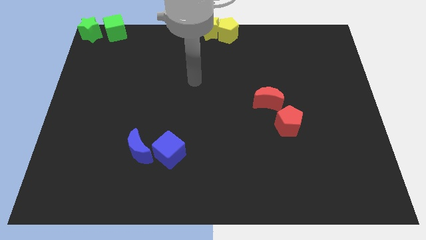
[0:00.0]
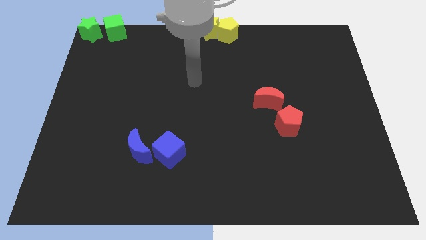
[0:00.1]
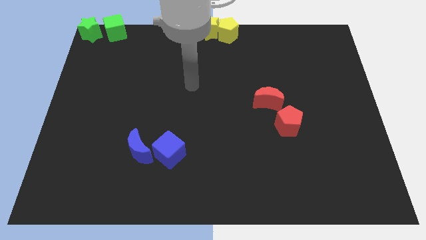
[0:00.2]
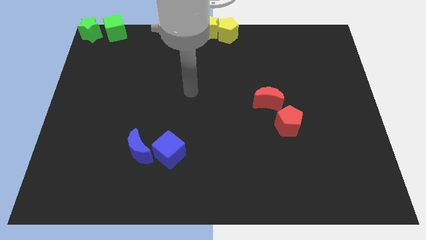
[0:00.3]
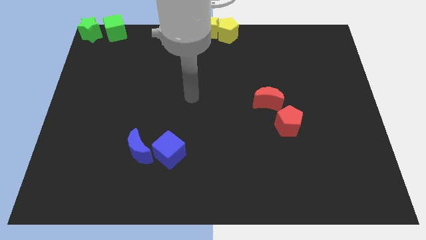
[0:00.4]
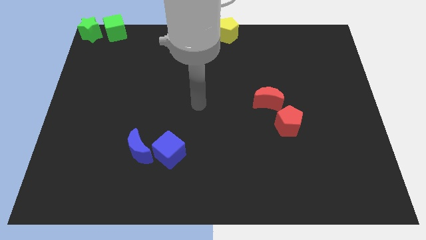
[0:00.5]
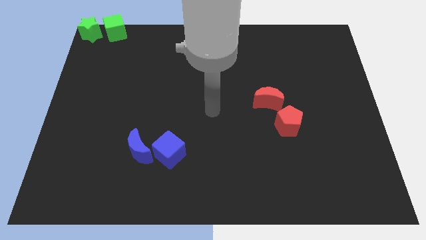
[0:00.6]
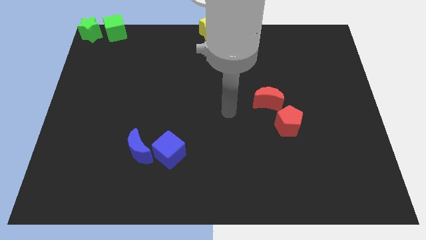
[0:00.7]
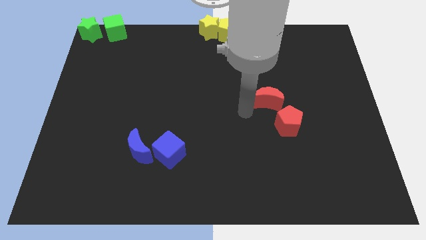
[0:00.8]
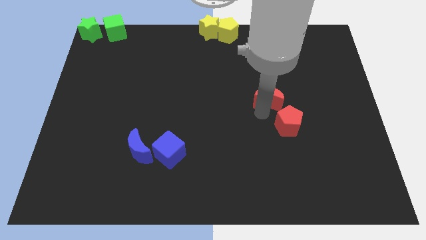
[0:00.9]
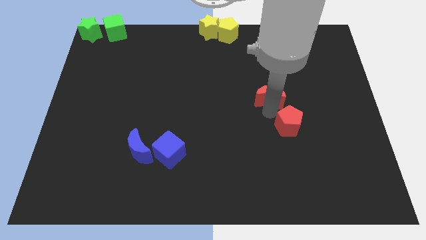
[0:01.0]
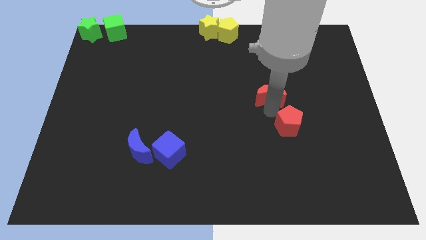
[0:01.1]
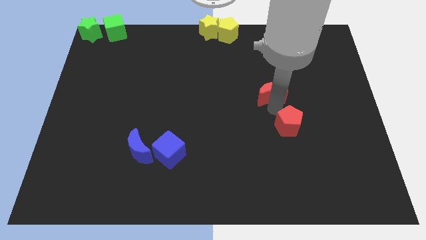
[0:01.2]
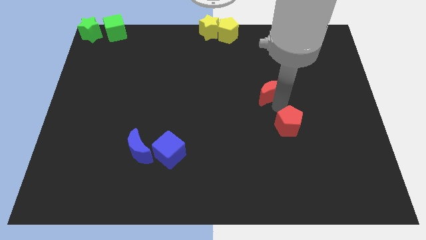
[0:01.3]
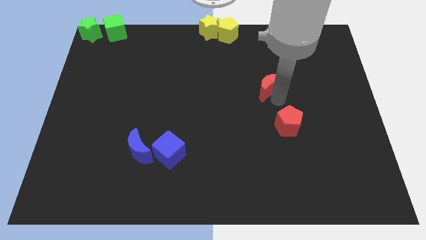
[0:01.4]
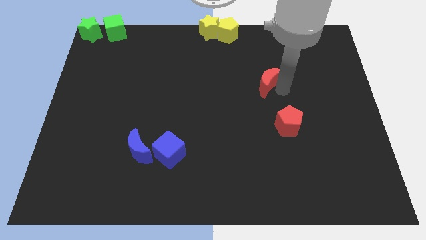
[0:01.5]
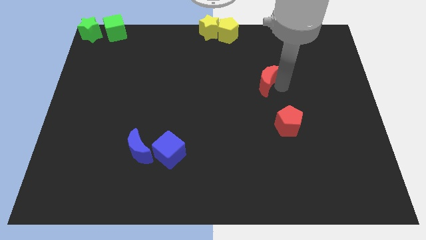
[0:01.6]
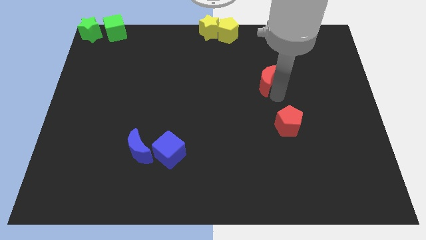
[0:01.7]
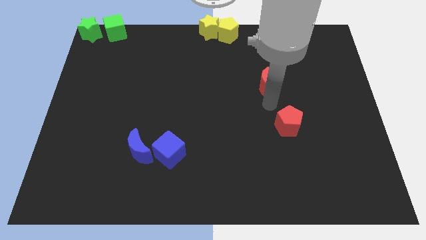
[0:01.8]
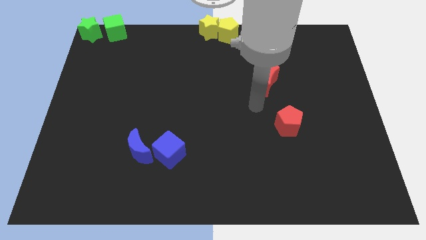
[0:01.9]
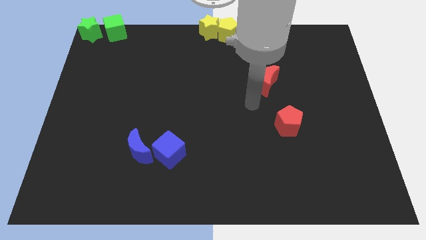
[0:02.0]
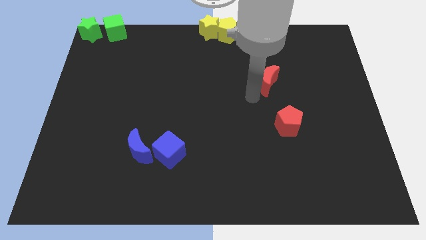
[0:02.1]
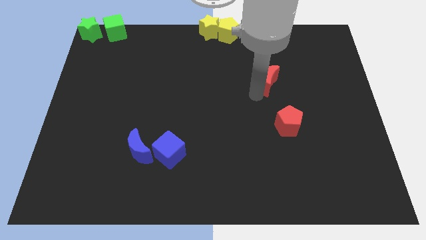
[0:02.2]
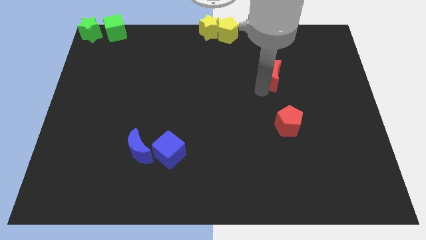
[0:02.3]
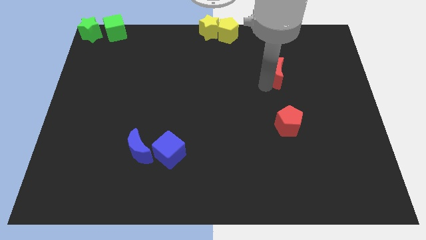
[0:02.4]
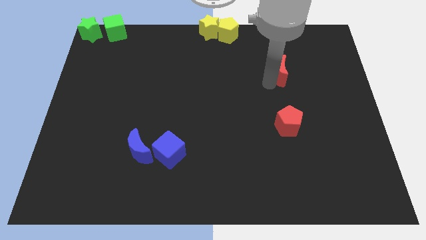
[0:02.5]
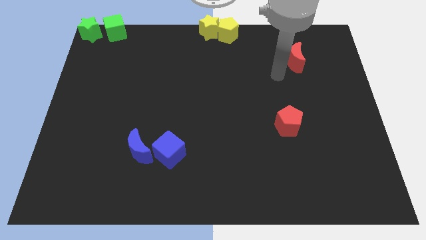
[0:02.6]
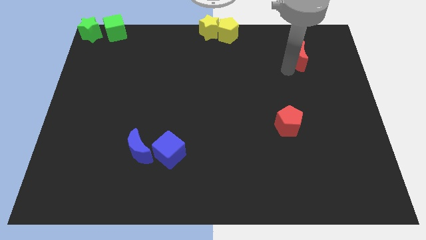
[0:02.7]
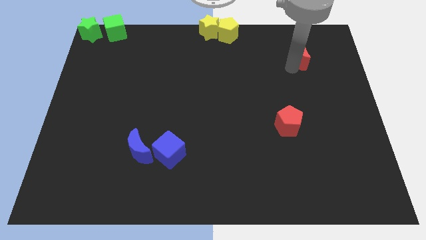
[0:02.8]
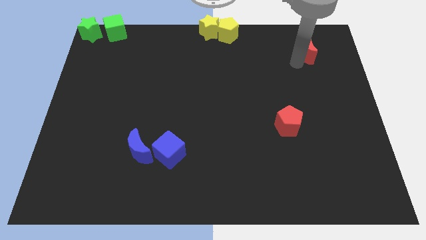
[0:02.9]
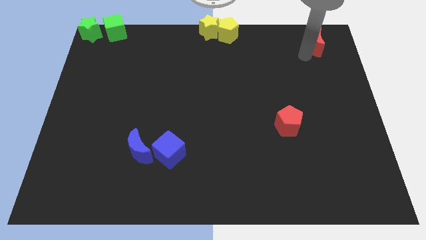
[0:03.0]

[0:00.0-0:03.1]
separate the red moon from the red pentagon

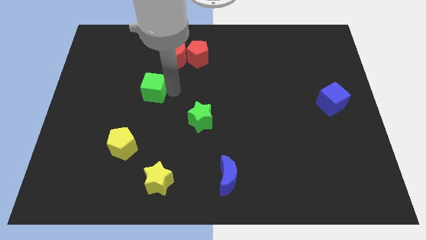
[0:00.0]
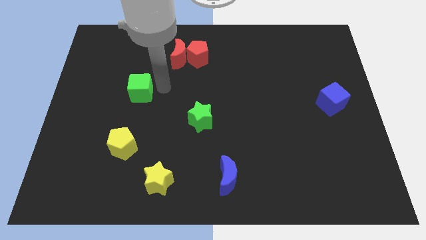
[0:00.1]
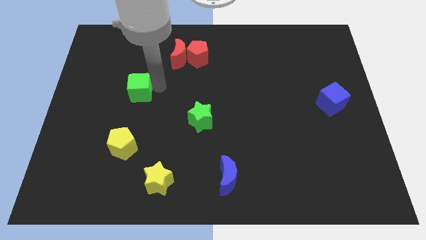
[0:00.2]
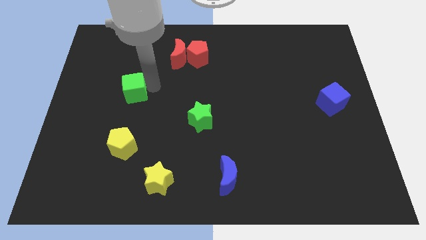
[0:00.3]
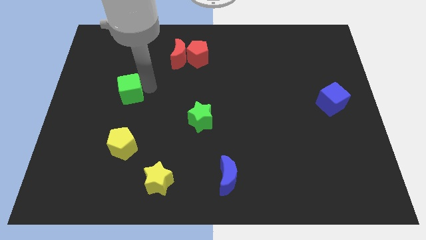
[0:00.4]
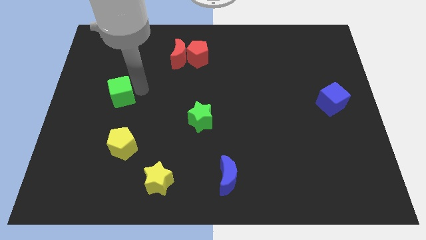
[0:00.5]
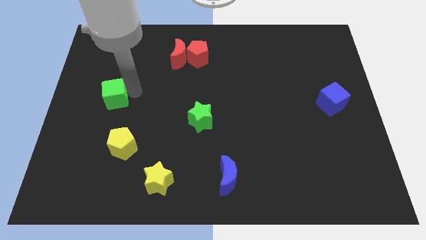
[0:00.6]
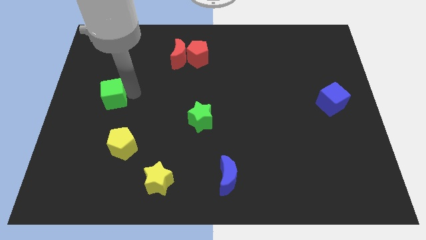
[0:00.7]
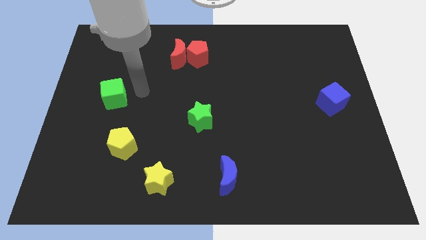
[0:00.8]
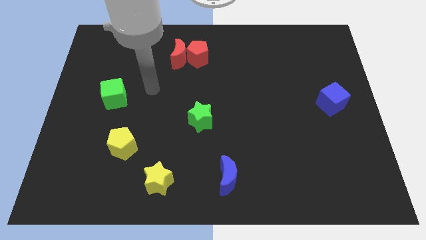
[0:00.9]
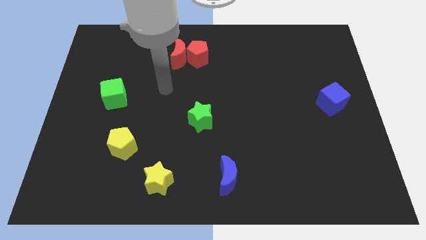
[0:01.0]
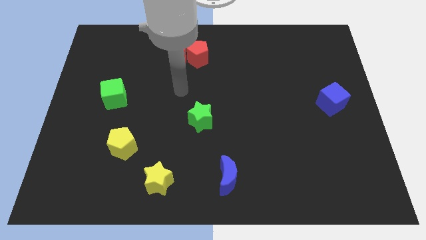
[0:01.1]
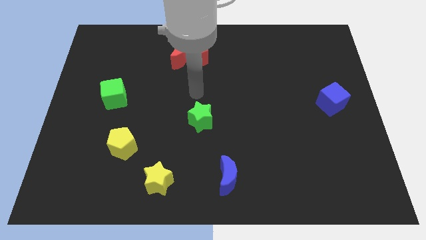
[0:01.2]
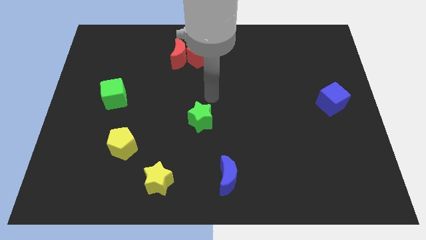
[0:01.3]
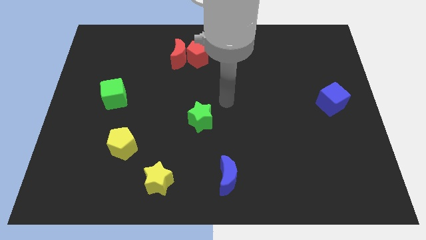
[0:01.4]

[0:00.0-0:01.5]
move the green cube to the left of the board

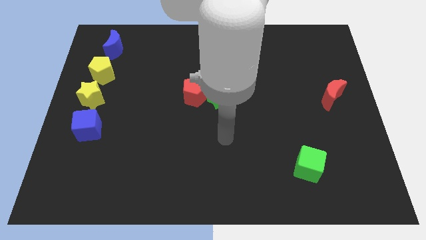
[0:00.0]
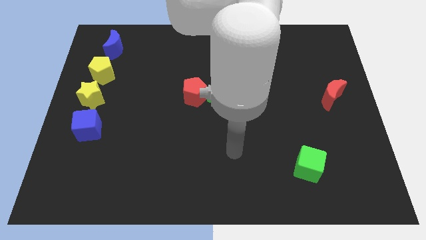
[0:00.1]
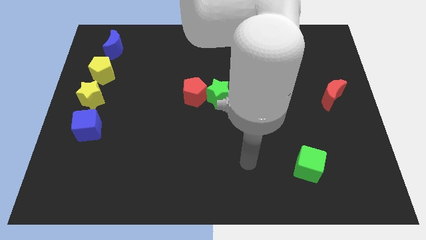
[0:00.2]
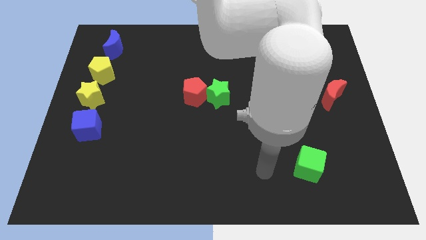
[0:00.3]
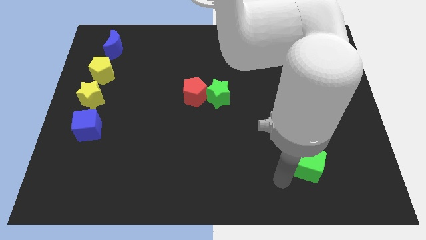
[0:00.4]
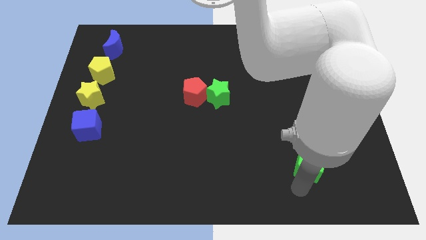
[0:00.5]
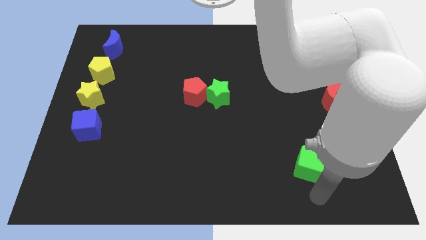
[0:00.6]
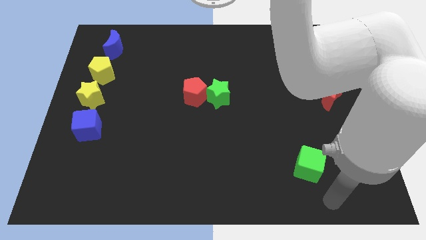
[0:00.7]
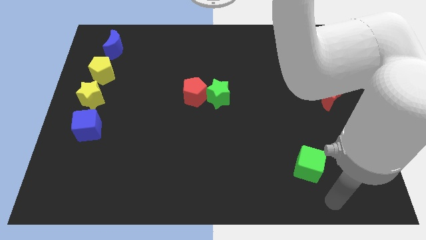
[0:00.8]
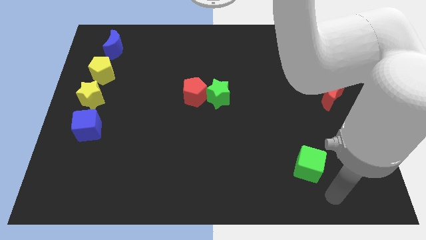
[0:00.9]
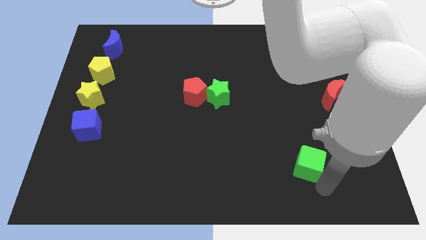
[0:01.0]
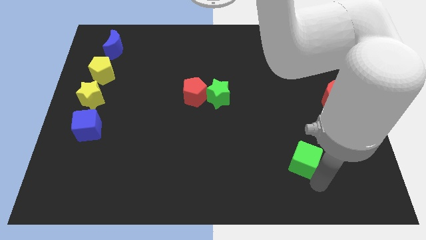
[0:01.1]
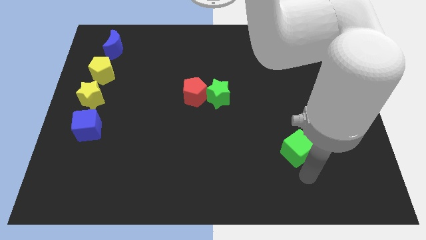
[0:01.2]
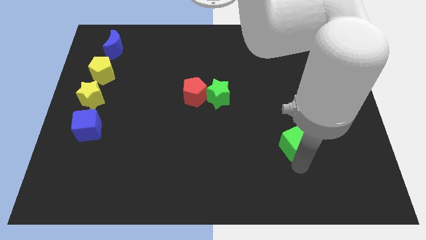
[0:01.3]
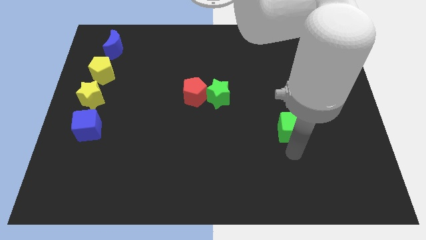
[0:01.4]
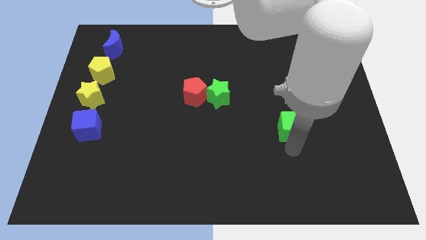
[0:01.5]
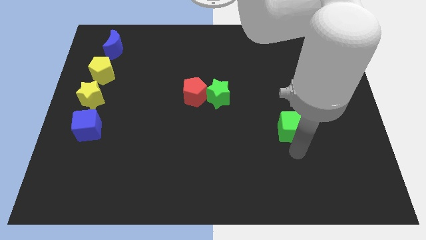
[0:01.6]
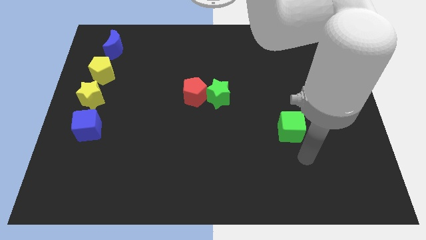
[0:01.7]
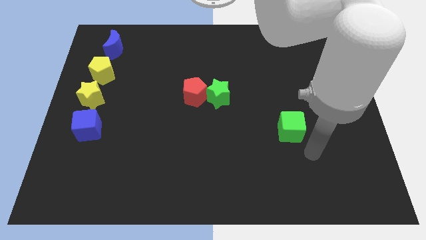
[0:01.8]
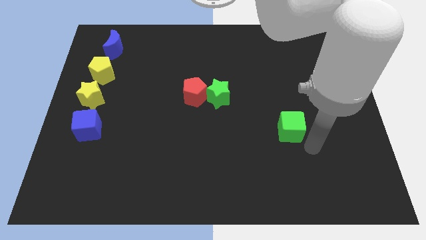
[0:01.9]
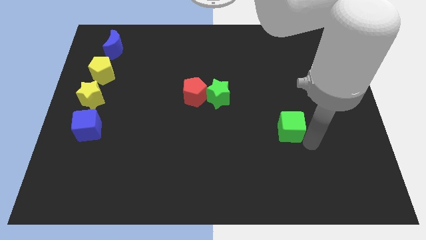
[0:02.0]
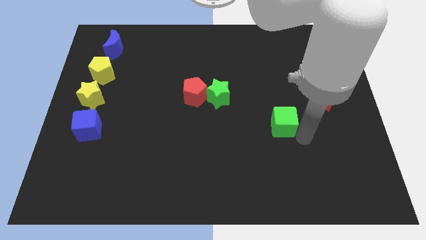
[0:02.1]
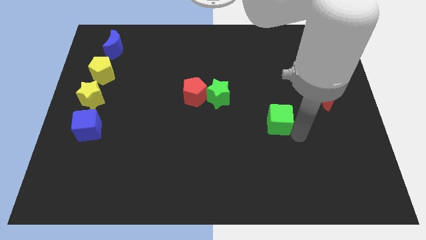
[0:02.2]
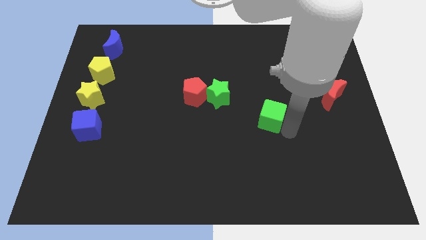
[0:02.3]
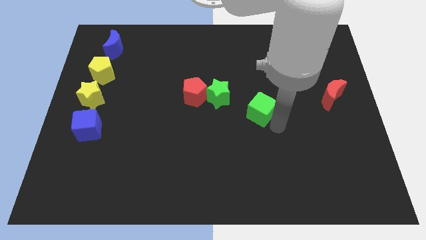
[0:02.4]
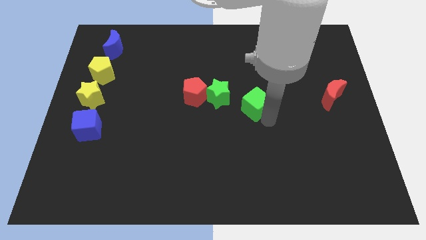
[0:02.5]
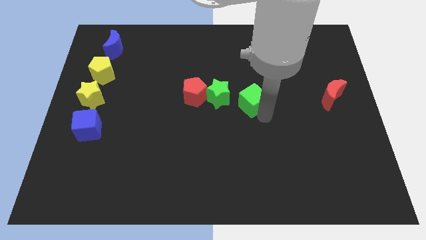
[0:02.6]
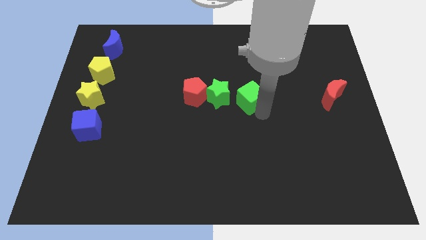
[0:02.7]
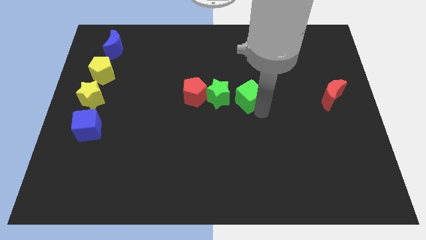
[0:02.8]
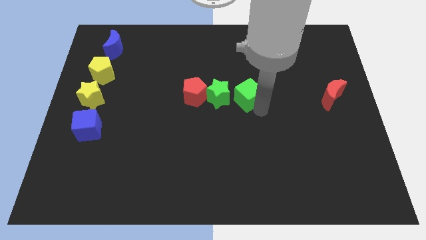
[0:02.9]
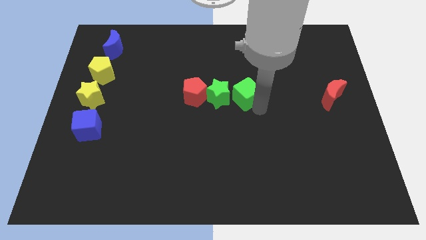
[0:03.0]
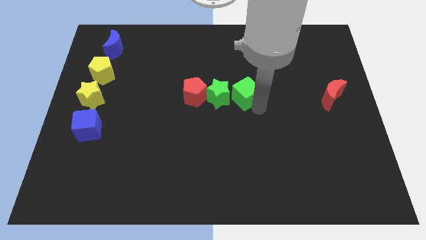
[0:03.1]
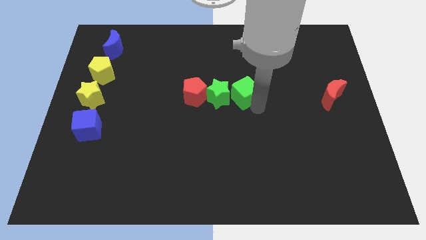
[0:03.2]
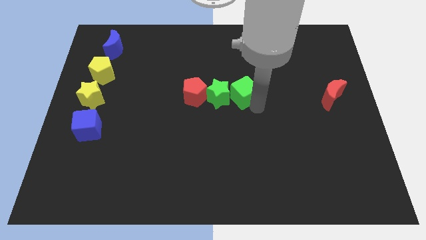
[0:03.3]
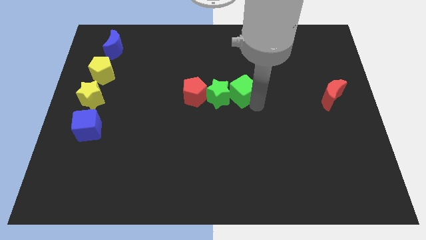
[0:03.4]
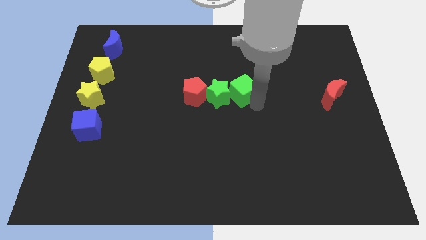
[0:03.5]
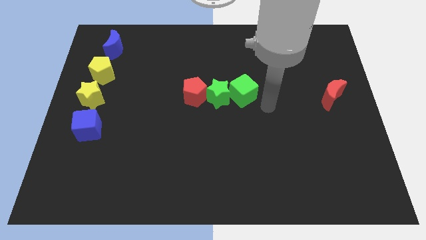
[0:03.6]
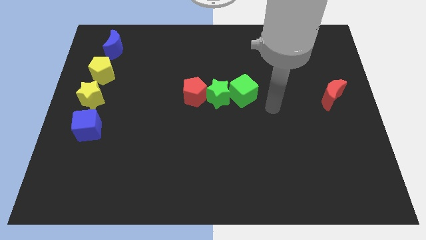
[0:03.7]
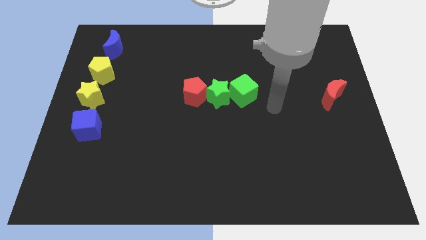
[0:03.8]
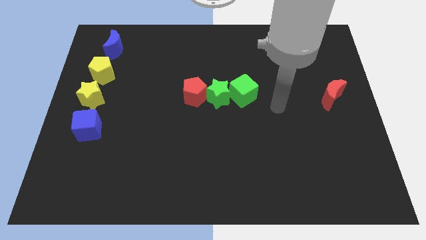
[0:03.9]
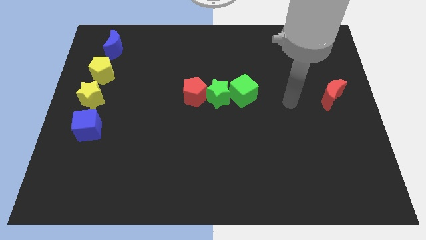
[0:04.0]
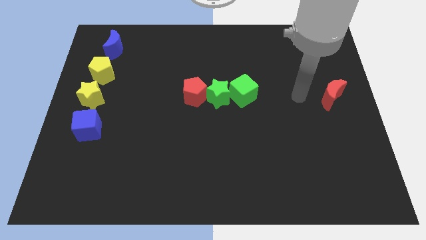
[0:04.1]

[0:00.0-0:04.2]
move the green cube right to the green star

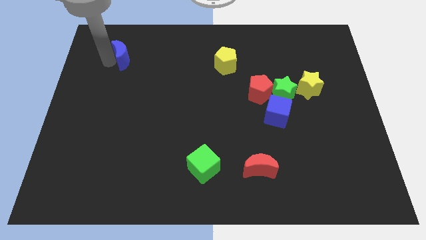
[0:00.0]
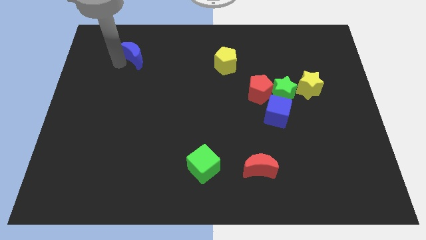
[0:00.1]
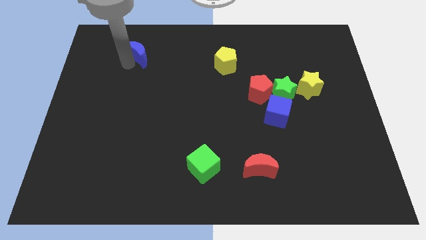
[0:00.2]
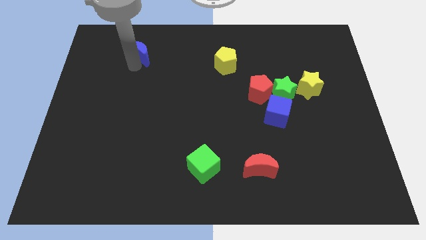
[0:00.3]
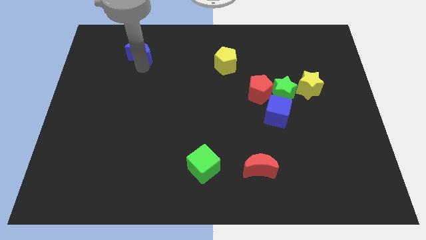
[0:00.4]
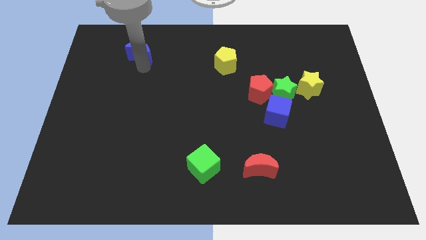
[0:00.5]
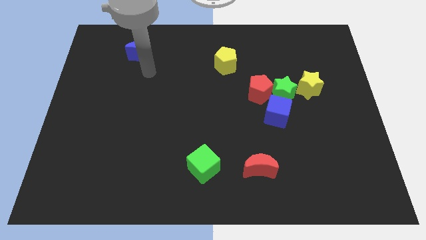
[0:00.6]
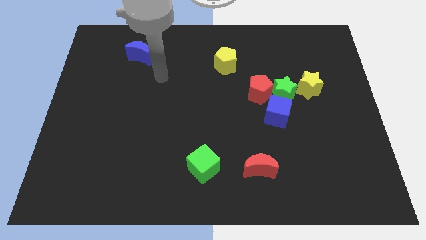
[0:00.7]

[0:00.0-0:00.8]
move the blue crescent slightly to the top center of the board
